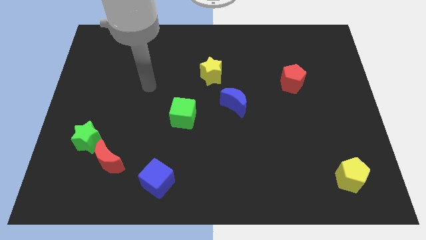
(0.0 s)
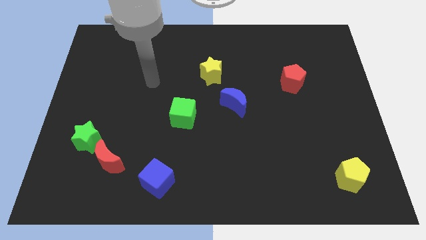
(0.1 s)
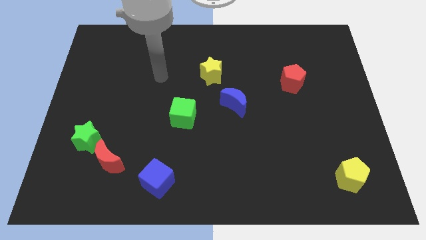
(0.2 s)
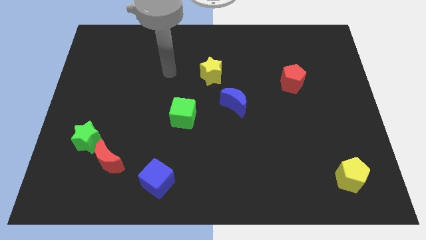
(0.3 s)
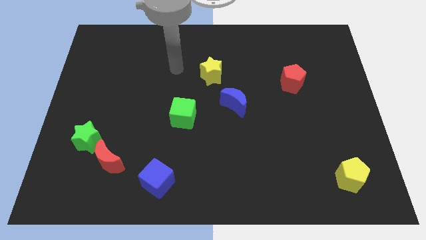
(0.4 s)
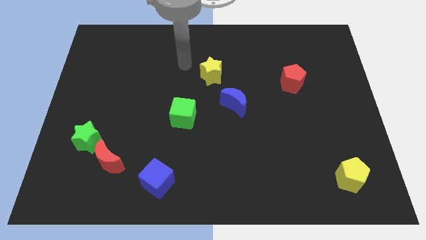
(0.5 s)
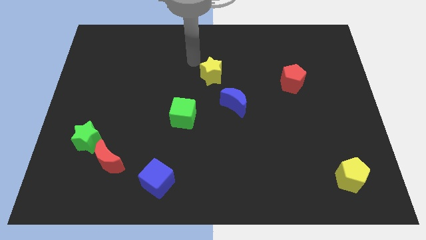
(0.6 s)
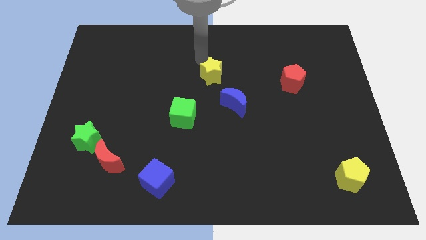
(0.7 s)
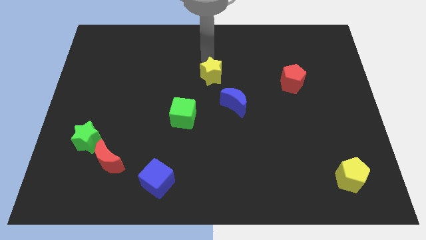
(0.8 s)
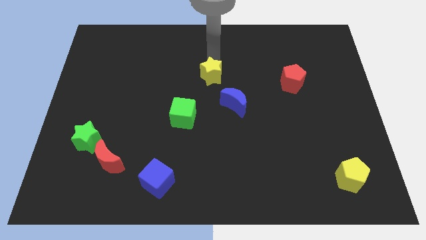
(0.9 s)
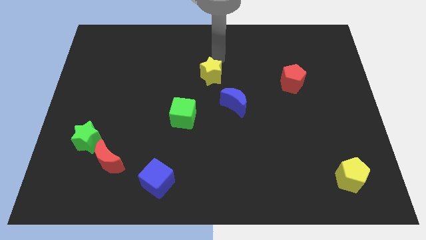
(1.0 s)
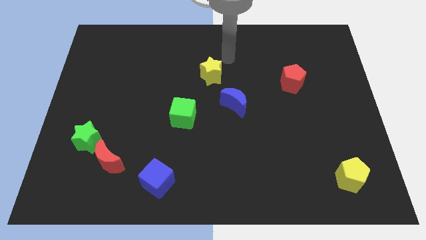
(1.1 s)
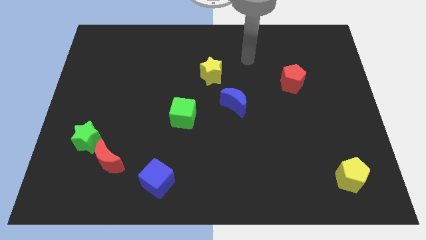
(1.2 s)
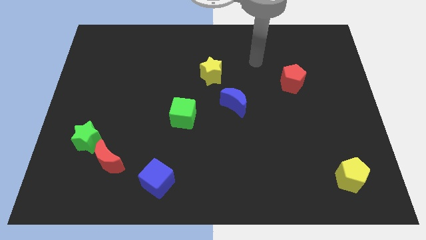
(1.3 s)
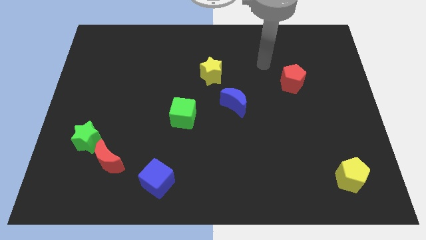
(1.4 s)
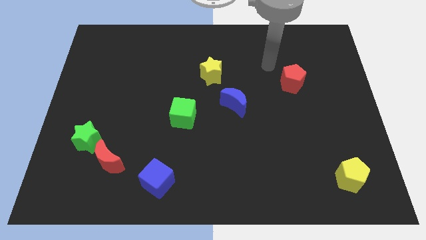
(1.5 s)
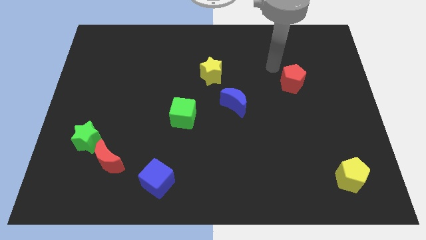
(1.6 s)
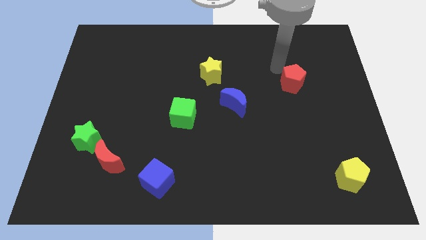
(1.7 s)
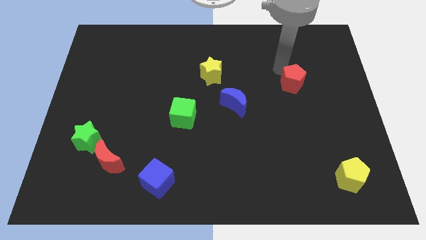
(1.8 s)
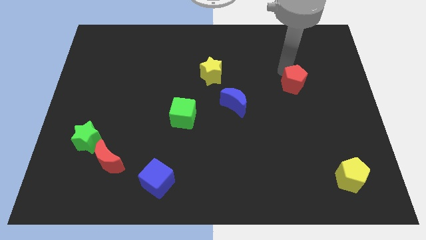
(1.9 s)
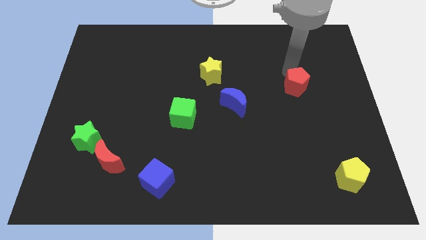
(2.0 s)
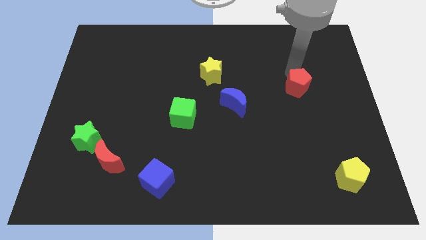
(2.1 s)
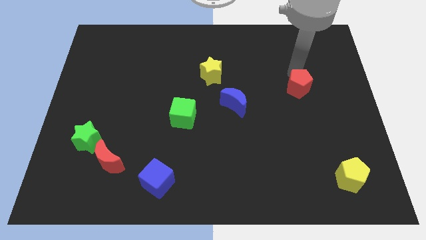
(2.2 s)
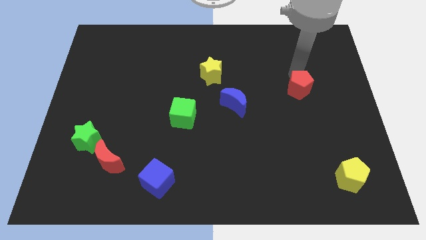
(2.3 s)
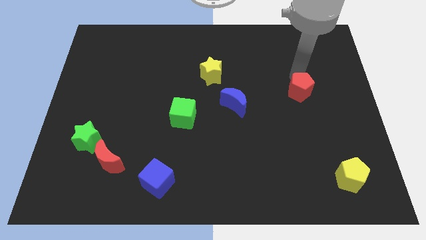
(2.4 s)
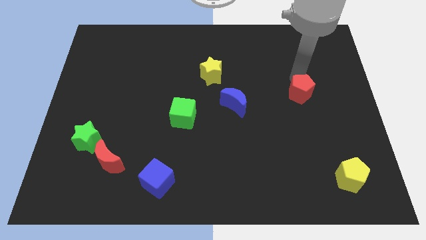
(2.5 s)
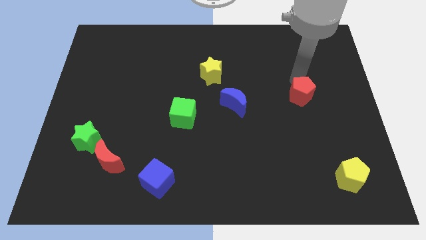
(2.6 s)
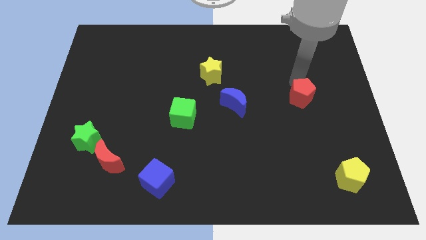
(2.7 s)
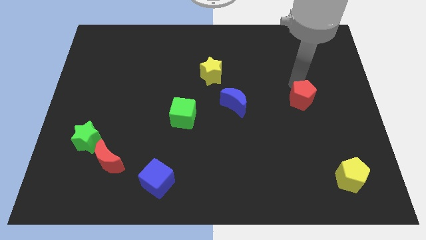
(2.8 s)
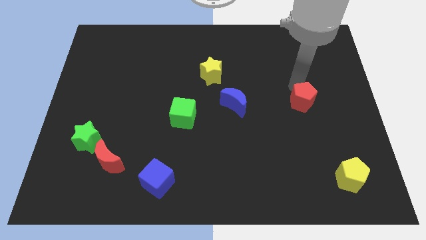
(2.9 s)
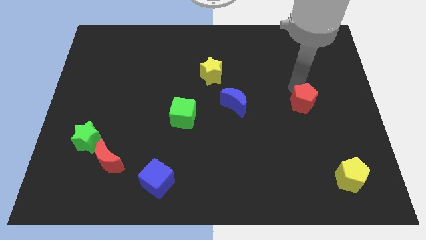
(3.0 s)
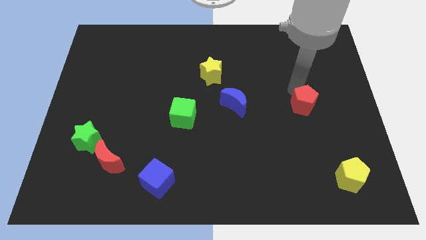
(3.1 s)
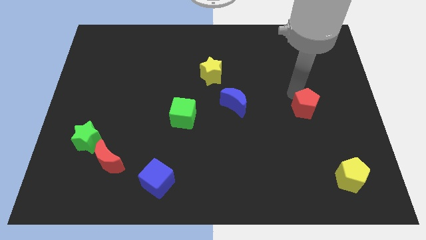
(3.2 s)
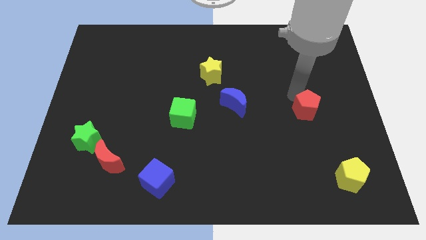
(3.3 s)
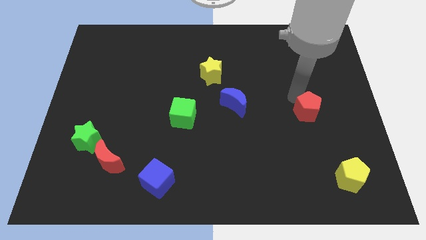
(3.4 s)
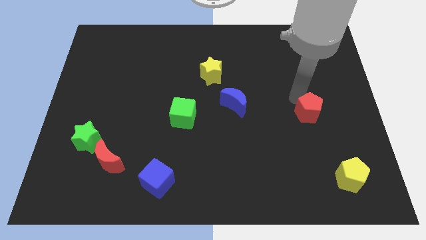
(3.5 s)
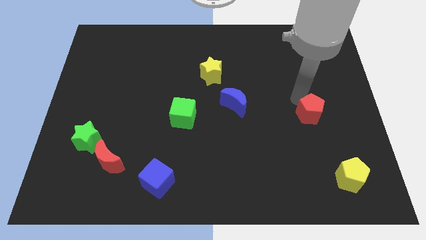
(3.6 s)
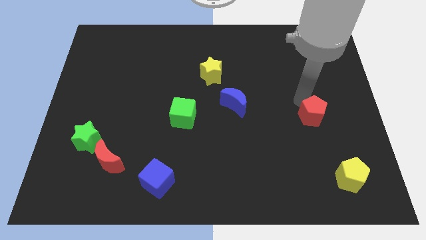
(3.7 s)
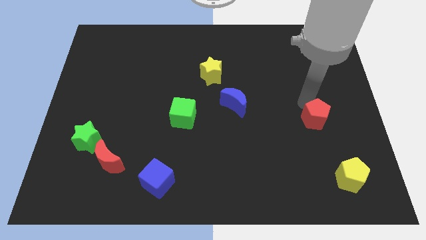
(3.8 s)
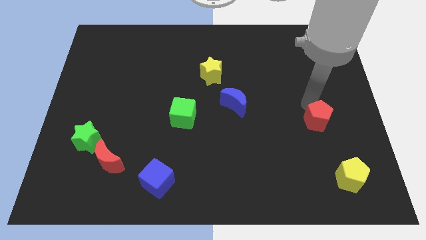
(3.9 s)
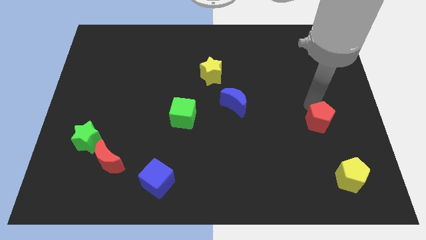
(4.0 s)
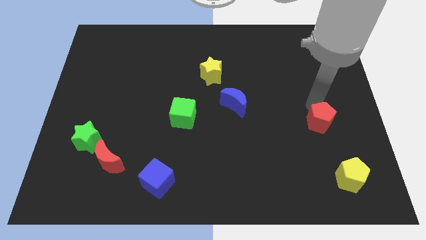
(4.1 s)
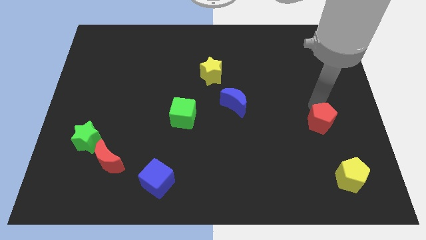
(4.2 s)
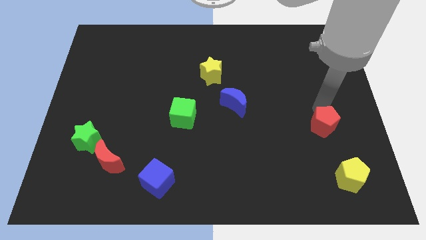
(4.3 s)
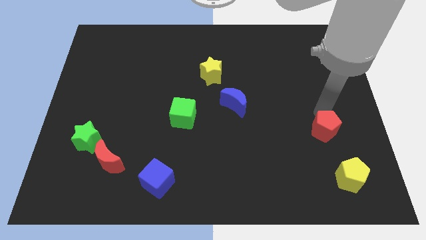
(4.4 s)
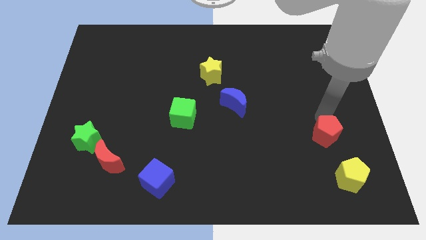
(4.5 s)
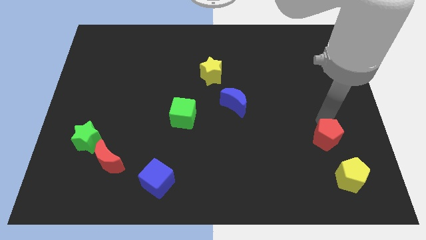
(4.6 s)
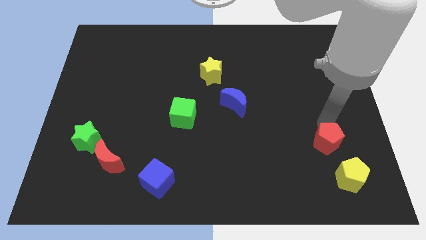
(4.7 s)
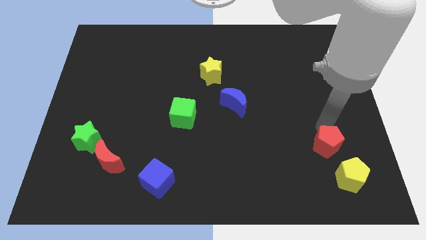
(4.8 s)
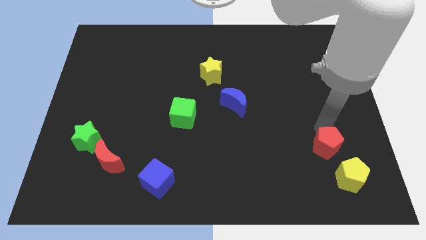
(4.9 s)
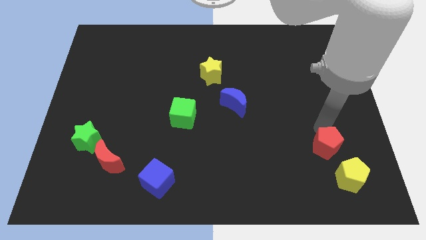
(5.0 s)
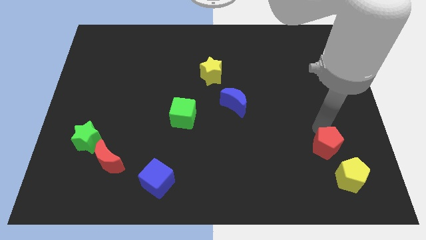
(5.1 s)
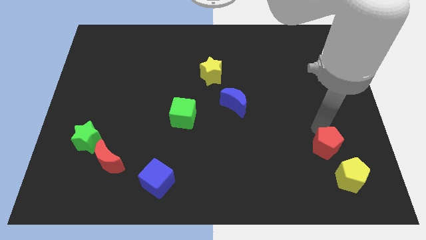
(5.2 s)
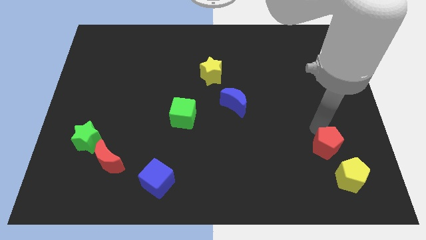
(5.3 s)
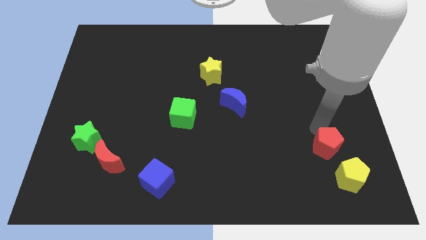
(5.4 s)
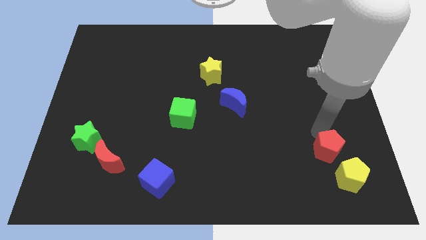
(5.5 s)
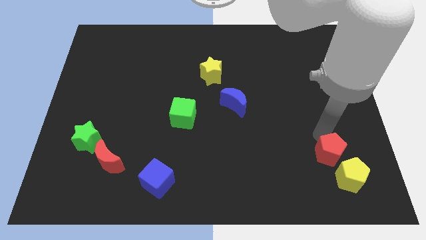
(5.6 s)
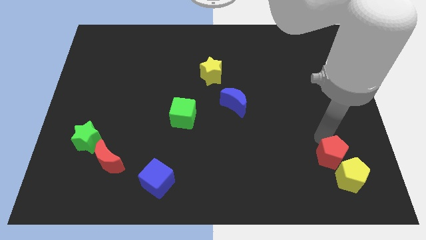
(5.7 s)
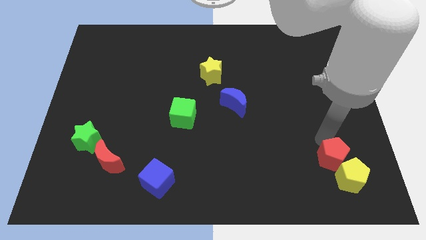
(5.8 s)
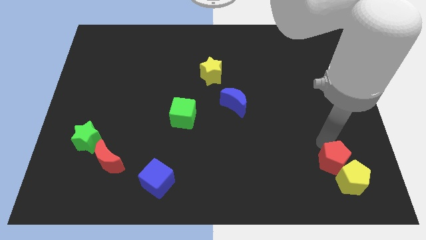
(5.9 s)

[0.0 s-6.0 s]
put the red pentagon towards the yellow pentagon

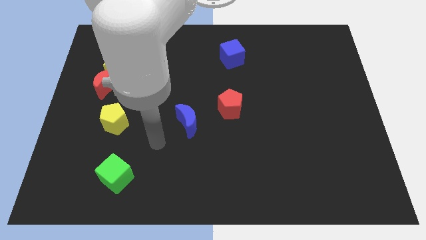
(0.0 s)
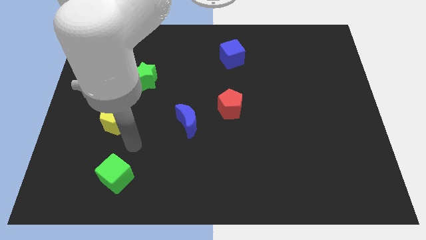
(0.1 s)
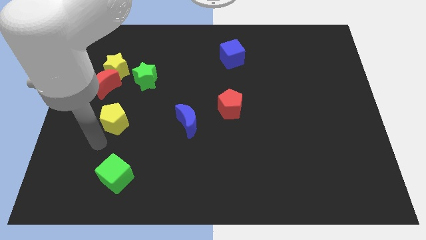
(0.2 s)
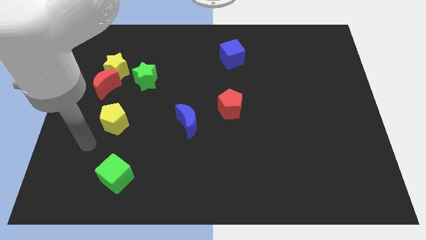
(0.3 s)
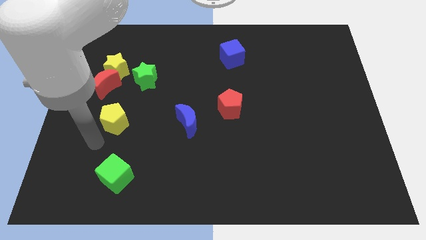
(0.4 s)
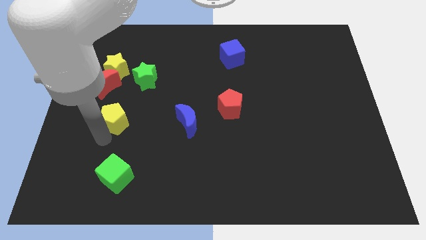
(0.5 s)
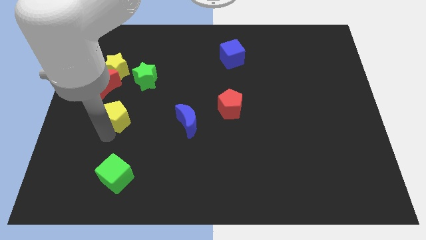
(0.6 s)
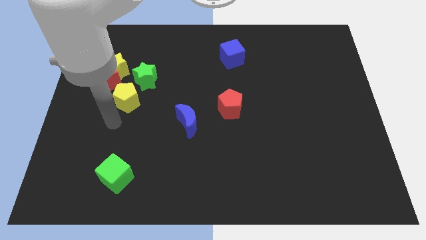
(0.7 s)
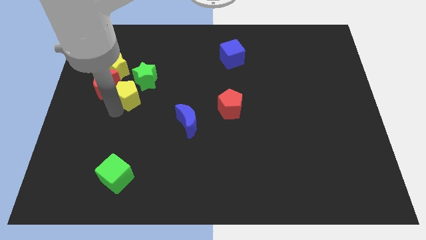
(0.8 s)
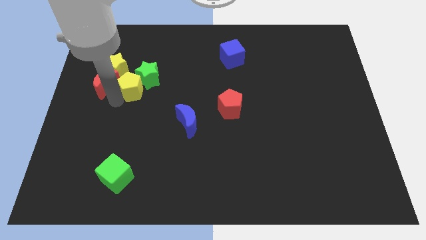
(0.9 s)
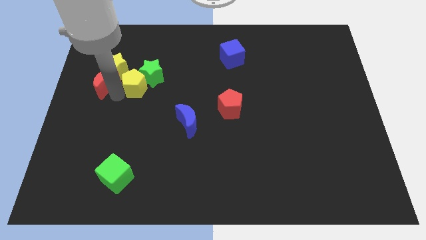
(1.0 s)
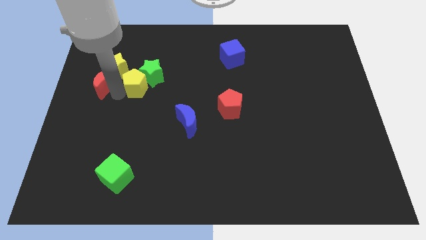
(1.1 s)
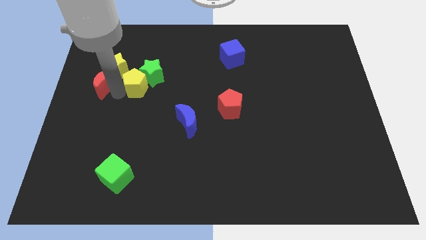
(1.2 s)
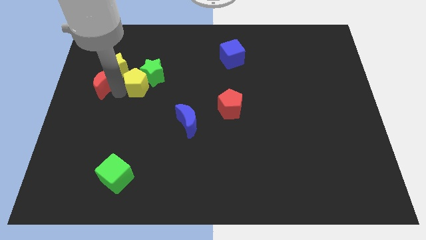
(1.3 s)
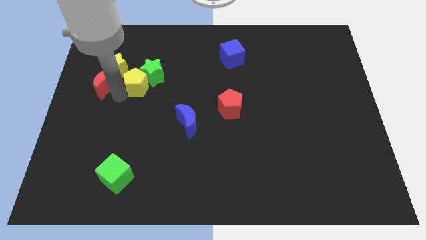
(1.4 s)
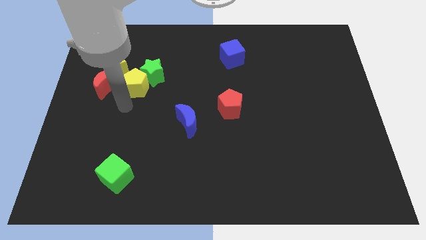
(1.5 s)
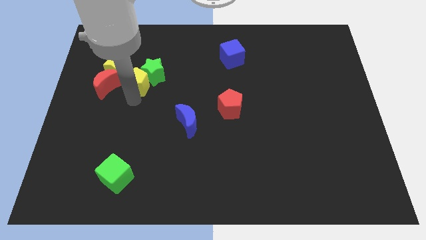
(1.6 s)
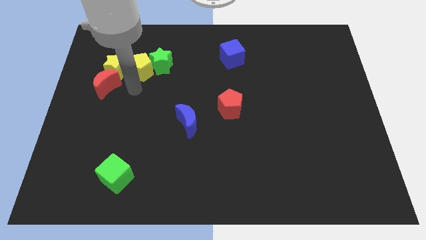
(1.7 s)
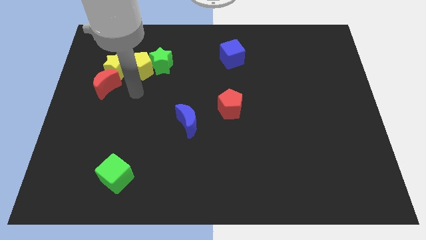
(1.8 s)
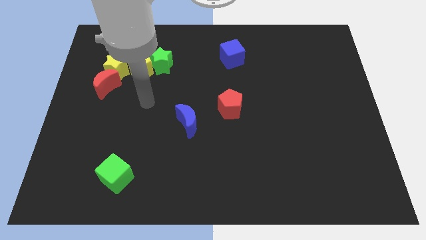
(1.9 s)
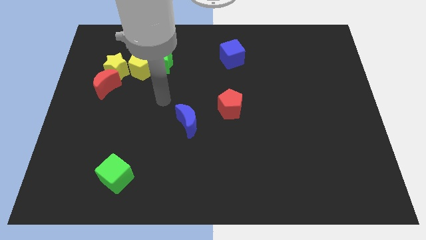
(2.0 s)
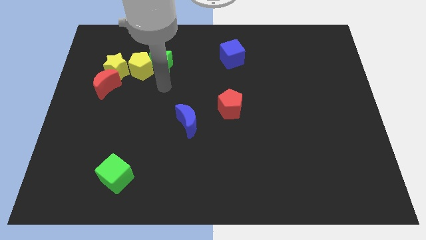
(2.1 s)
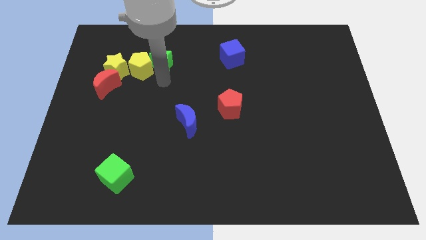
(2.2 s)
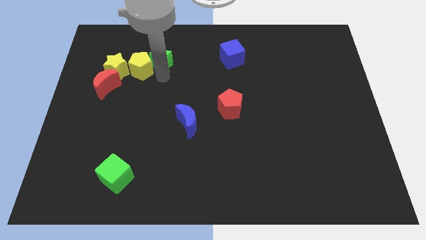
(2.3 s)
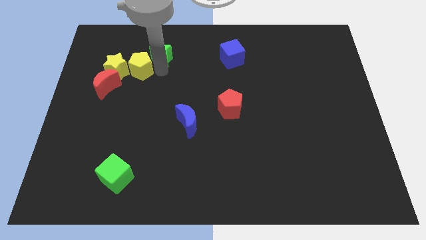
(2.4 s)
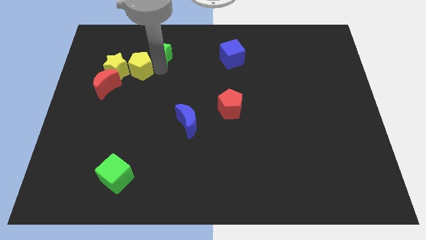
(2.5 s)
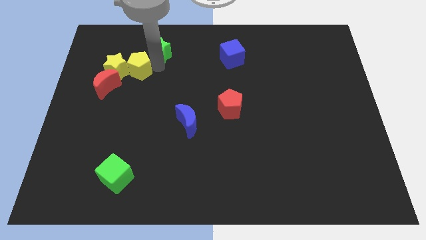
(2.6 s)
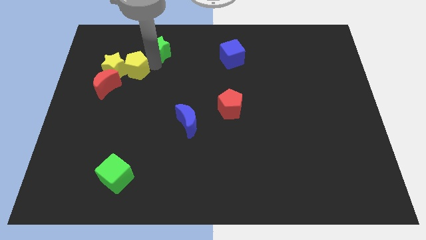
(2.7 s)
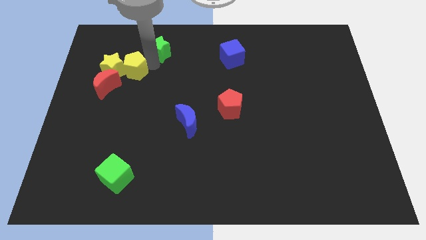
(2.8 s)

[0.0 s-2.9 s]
push the yellow pentagon towards the yellow star
